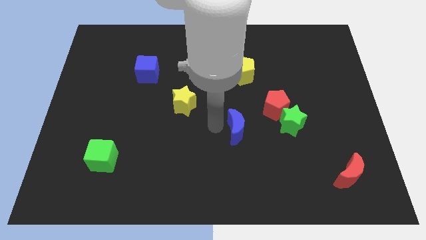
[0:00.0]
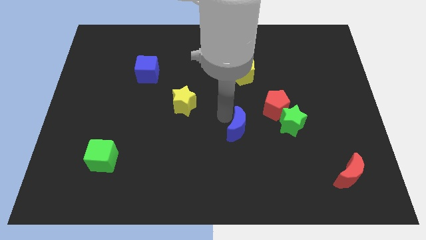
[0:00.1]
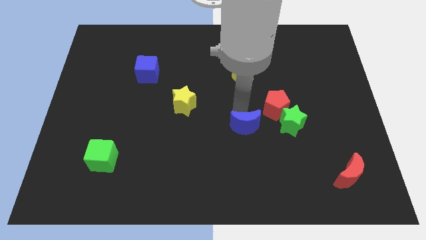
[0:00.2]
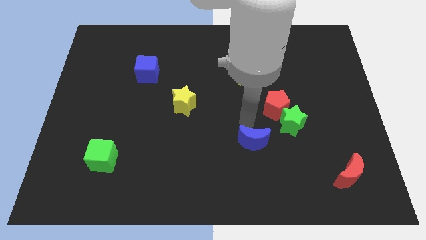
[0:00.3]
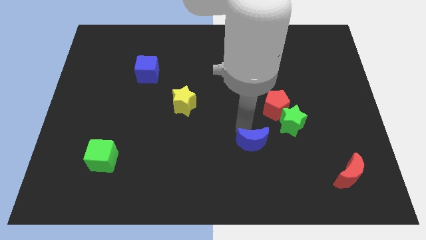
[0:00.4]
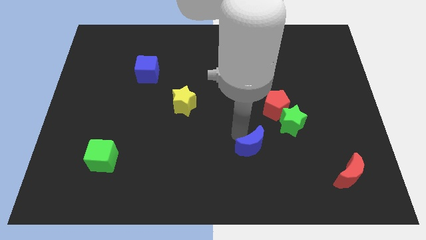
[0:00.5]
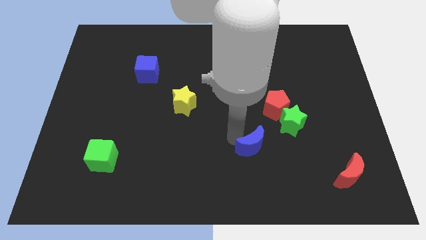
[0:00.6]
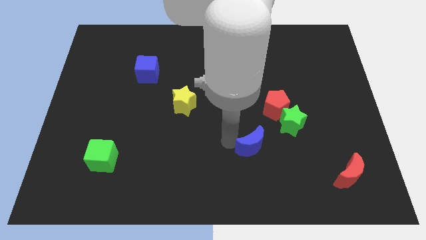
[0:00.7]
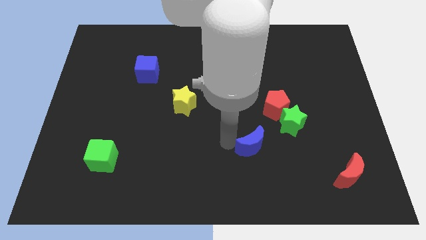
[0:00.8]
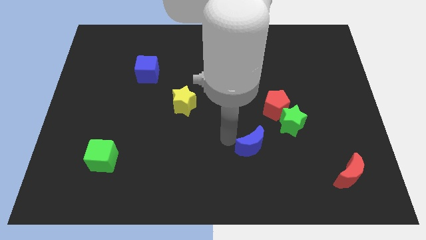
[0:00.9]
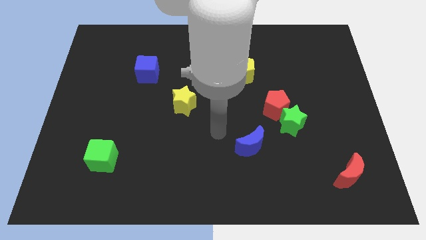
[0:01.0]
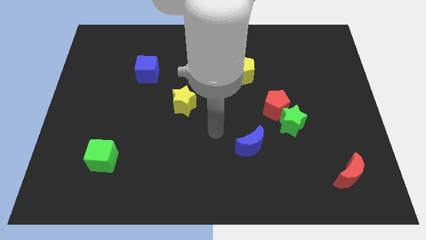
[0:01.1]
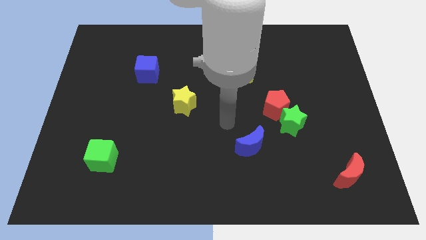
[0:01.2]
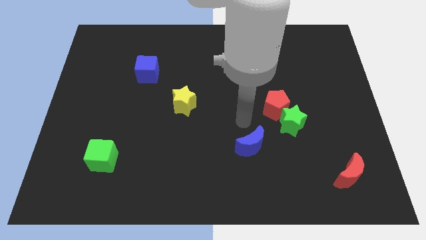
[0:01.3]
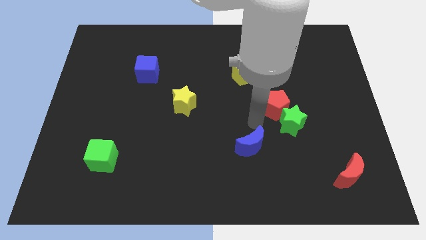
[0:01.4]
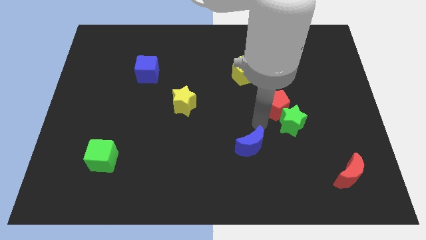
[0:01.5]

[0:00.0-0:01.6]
move the blue crescent below the yellow pentagon

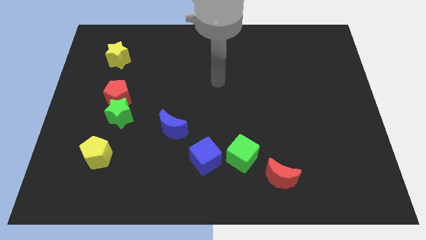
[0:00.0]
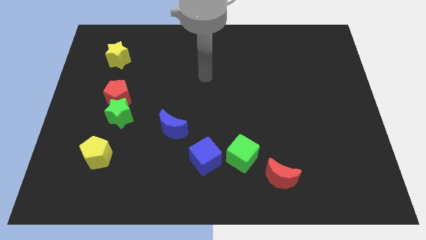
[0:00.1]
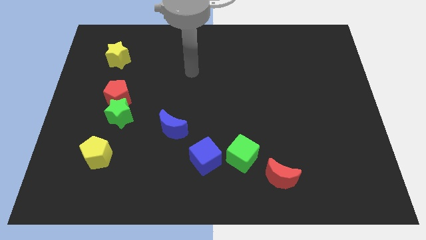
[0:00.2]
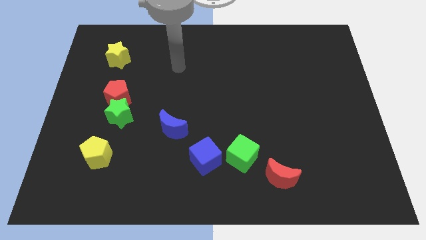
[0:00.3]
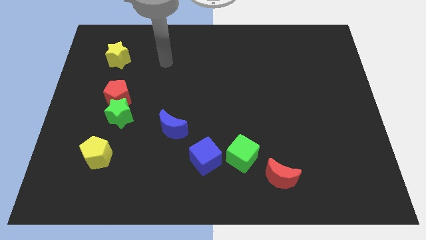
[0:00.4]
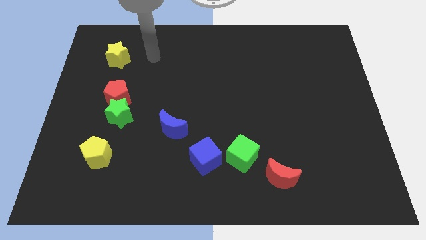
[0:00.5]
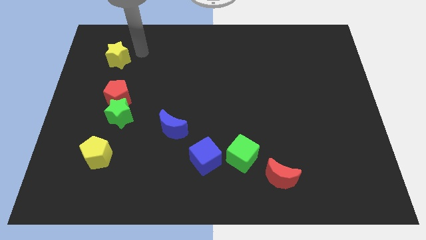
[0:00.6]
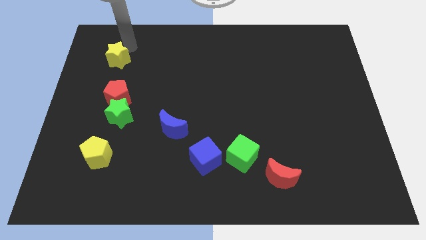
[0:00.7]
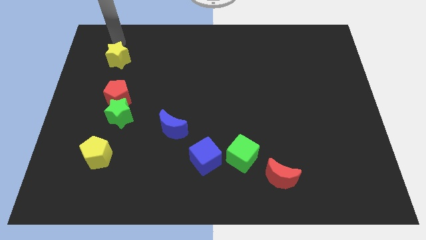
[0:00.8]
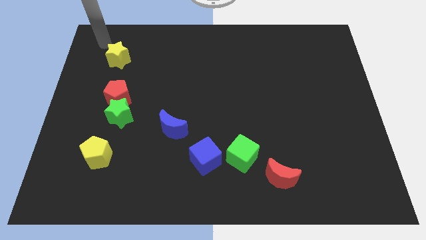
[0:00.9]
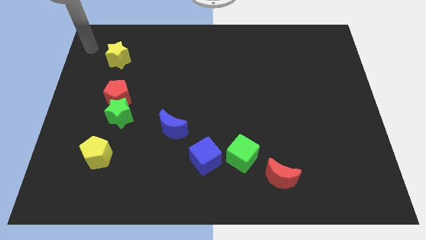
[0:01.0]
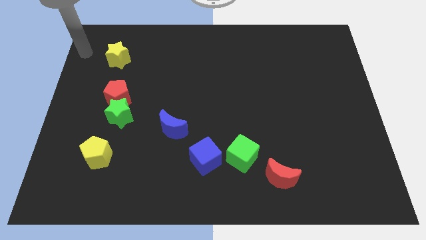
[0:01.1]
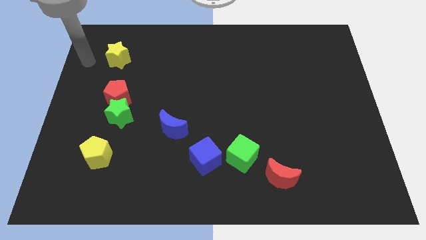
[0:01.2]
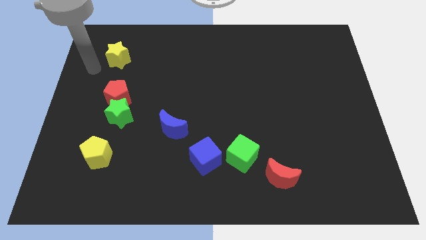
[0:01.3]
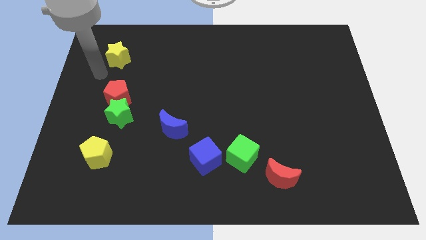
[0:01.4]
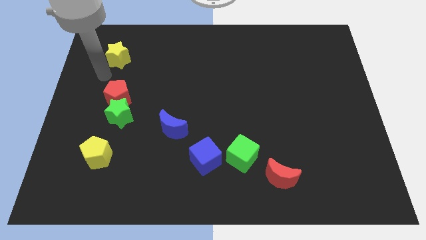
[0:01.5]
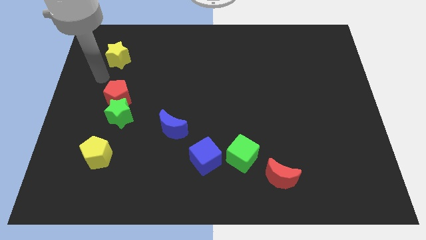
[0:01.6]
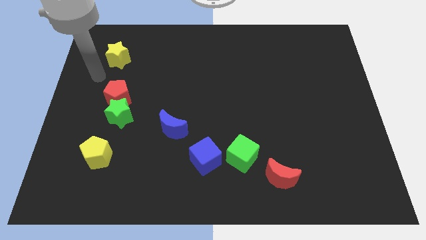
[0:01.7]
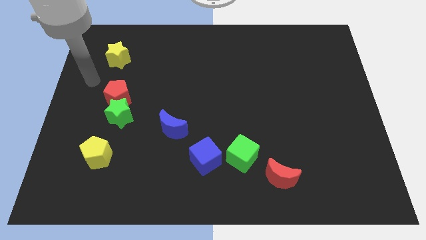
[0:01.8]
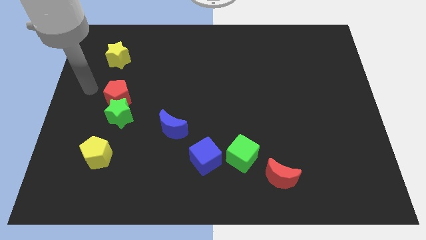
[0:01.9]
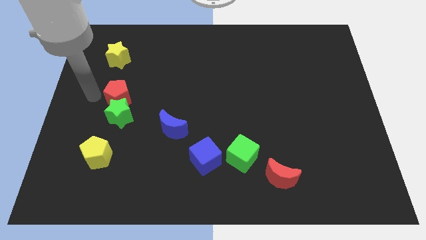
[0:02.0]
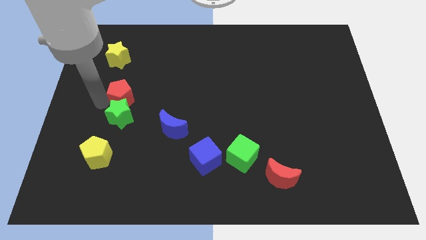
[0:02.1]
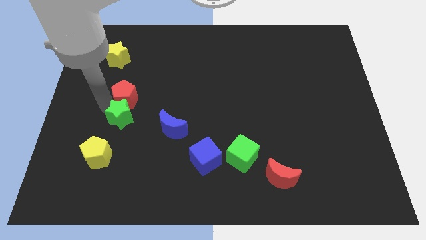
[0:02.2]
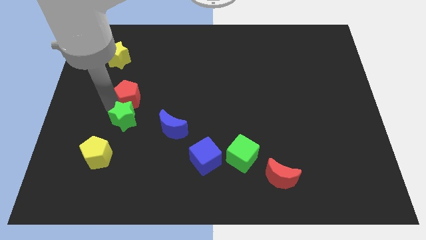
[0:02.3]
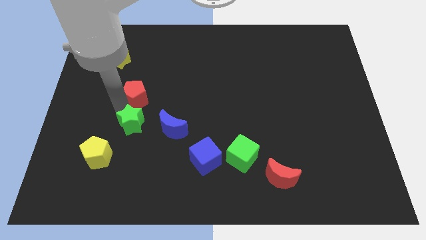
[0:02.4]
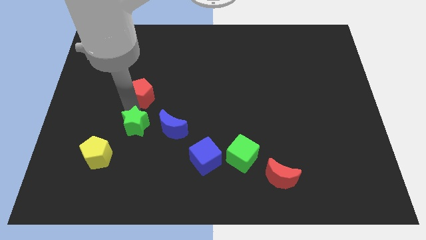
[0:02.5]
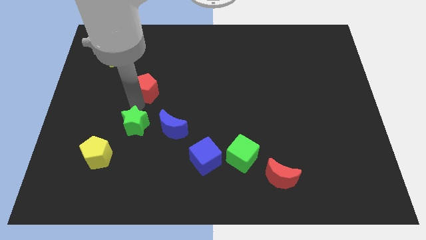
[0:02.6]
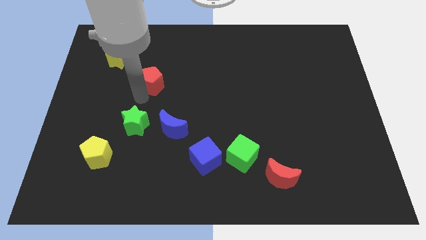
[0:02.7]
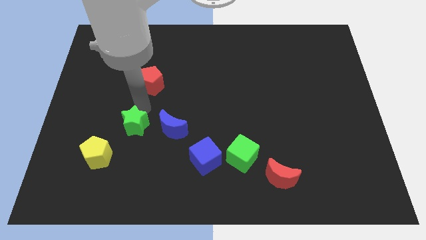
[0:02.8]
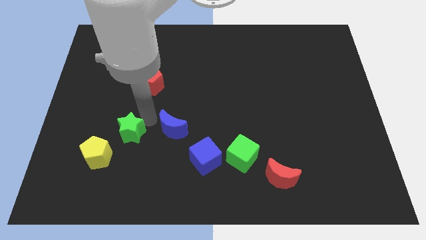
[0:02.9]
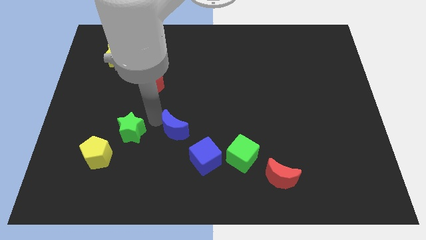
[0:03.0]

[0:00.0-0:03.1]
move the red pentagon away from the green star

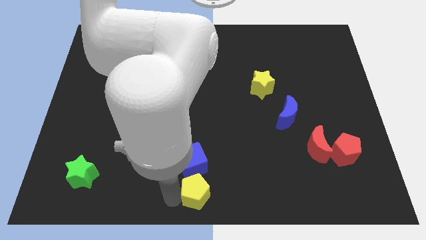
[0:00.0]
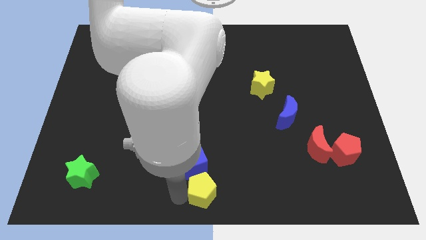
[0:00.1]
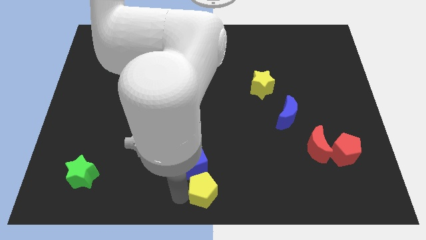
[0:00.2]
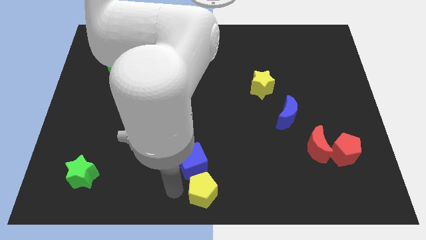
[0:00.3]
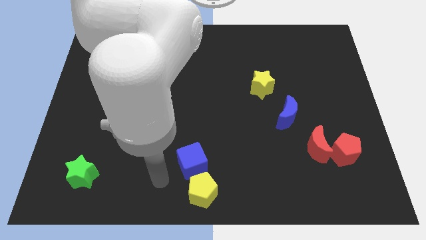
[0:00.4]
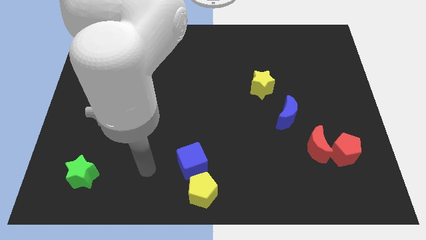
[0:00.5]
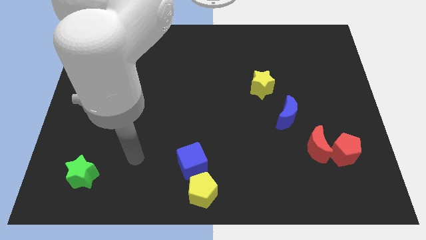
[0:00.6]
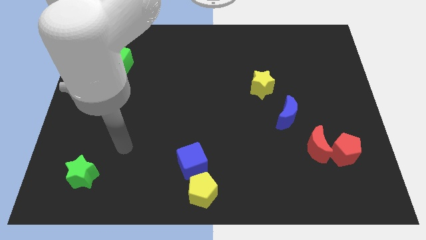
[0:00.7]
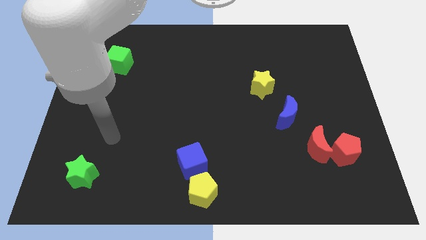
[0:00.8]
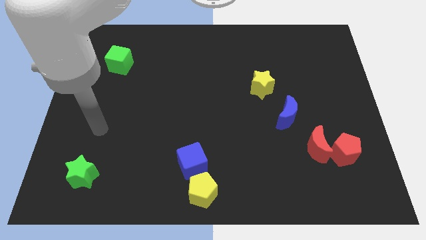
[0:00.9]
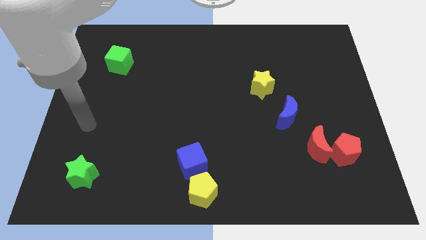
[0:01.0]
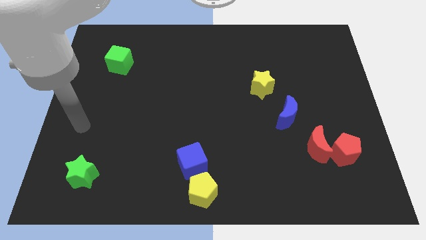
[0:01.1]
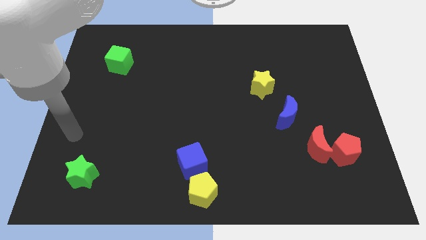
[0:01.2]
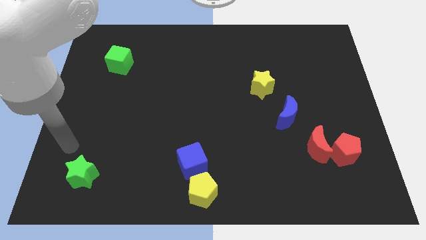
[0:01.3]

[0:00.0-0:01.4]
move the arm away from the yellow pentagon

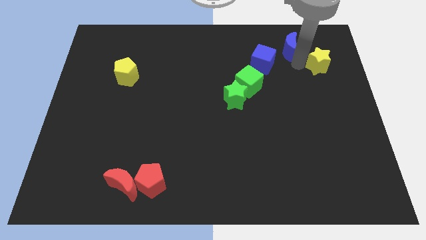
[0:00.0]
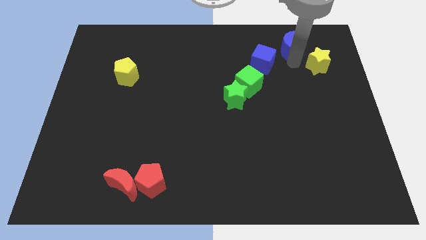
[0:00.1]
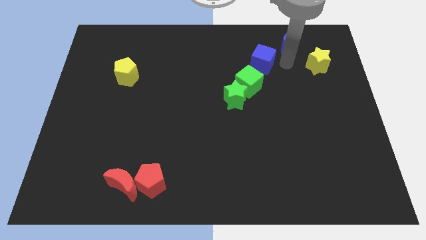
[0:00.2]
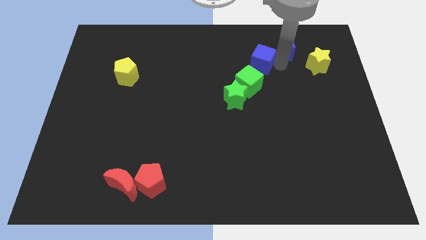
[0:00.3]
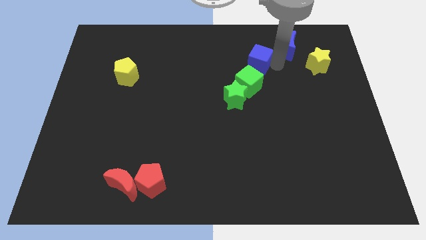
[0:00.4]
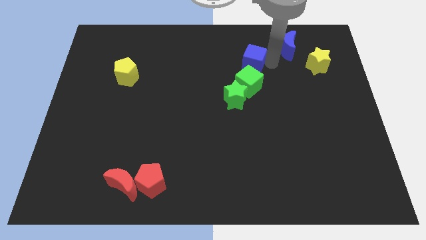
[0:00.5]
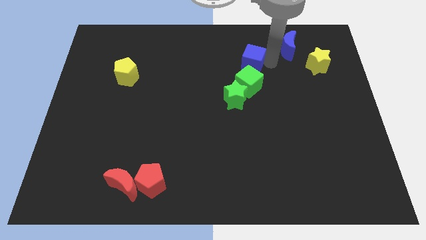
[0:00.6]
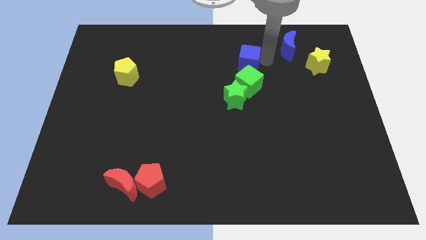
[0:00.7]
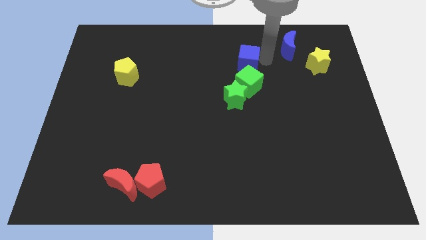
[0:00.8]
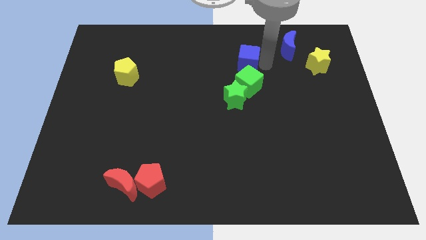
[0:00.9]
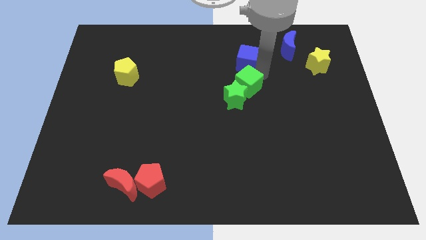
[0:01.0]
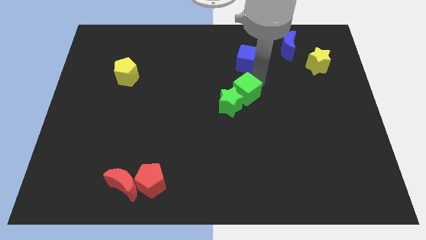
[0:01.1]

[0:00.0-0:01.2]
move the blue cube to the top of the green cube

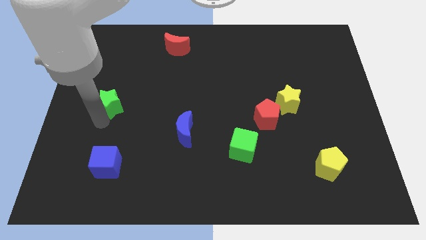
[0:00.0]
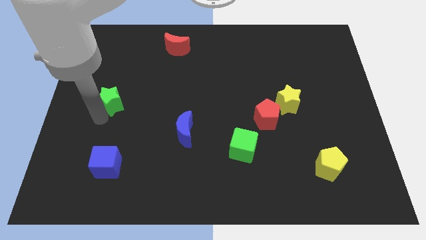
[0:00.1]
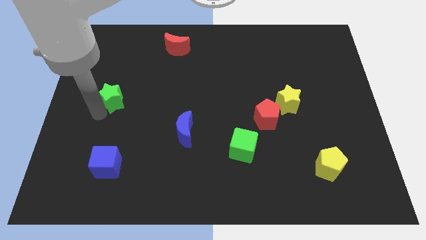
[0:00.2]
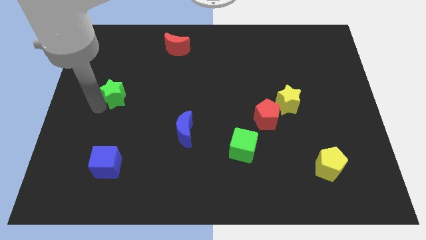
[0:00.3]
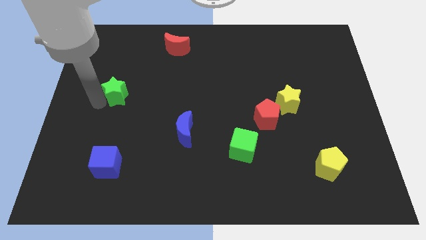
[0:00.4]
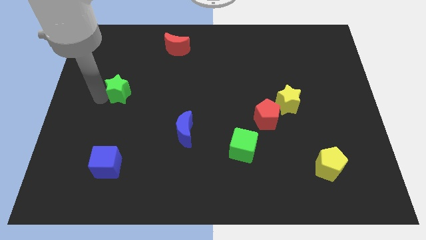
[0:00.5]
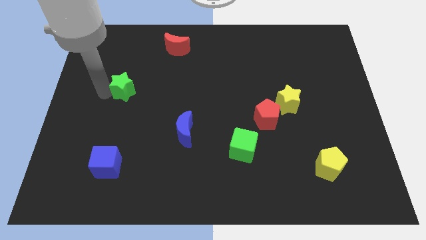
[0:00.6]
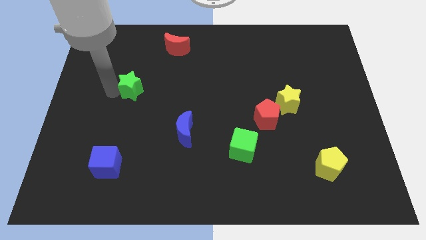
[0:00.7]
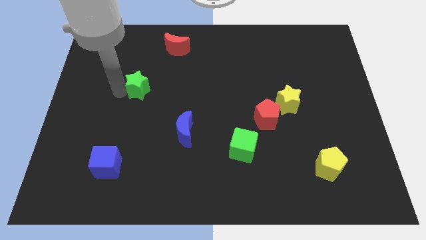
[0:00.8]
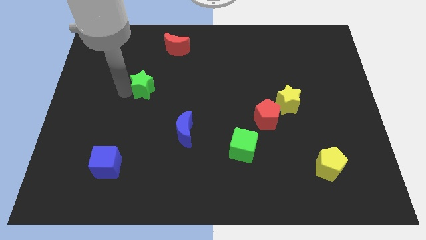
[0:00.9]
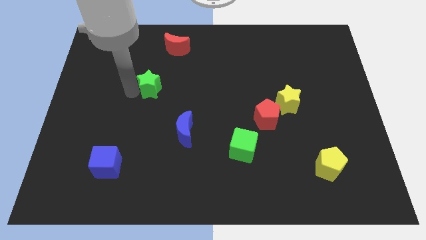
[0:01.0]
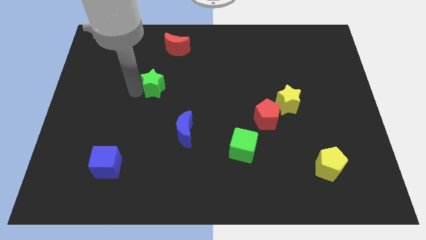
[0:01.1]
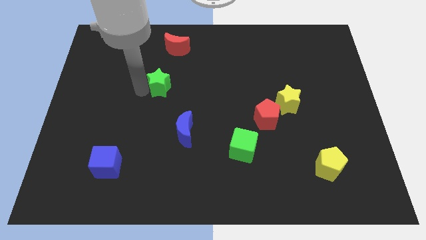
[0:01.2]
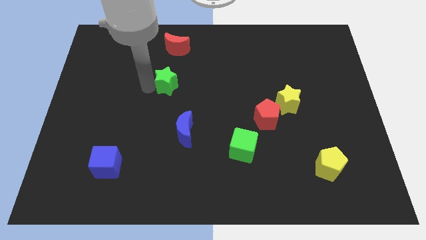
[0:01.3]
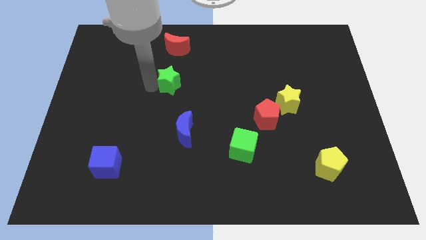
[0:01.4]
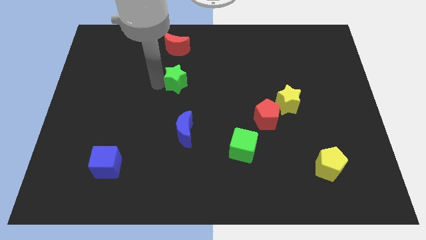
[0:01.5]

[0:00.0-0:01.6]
place green star below the red moon
